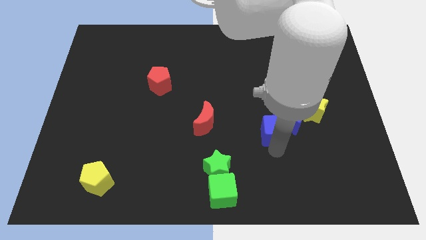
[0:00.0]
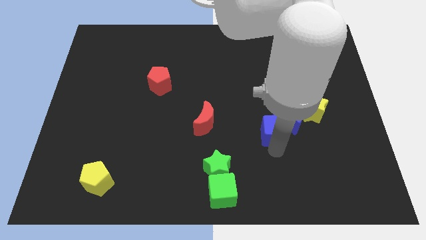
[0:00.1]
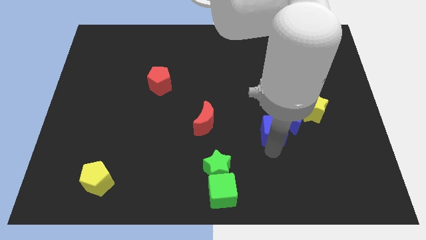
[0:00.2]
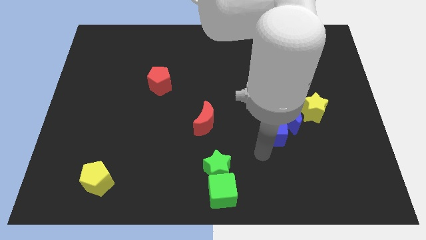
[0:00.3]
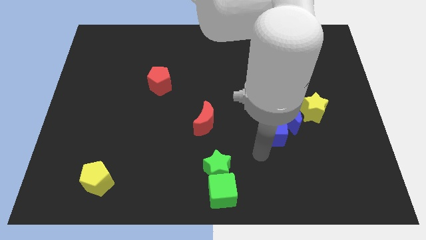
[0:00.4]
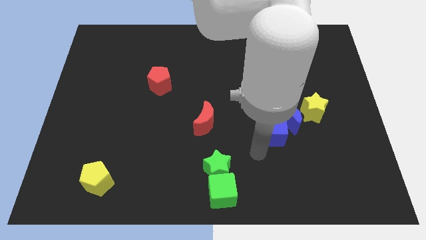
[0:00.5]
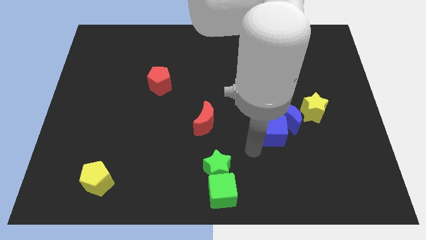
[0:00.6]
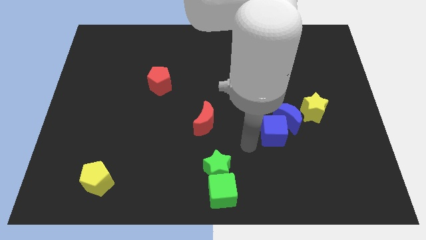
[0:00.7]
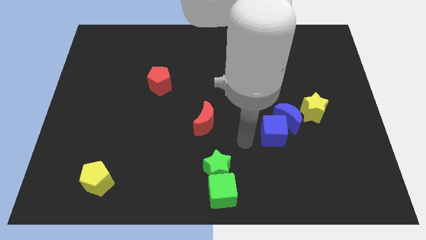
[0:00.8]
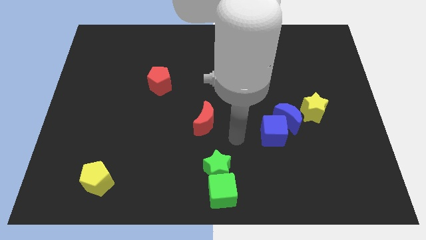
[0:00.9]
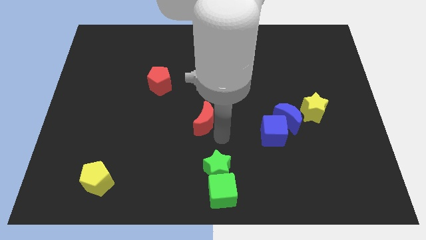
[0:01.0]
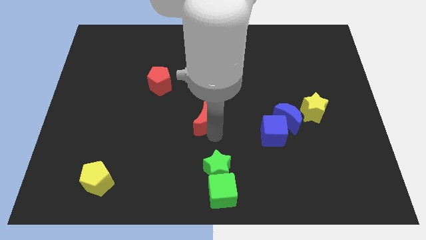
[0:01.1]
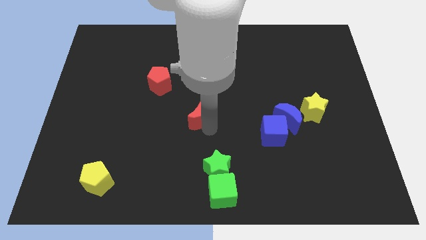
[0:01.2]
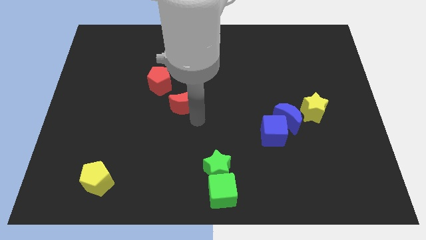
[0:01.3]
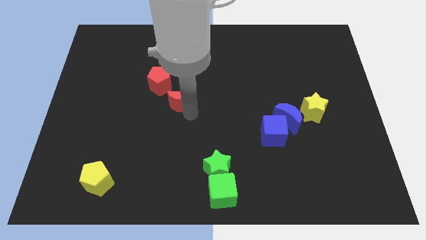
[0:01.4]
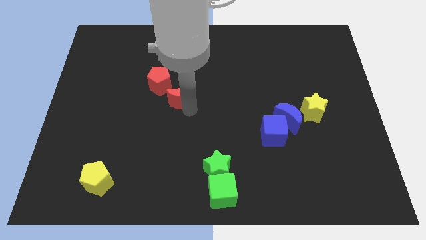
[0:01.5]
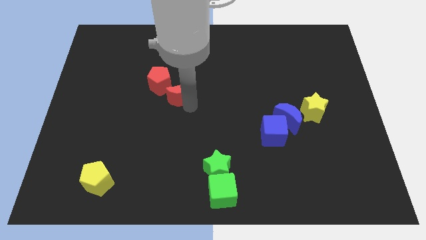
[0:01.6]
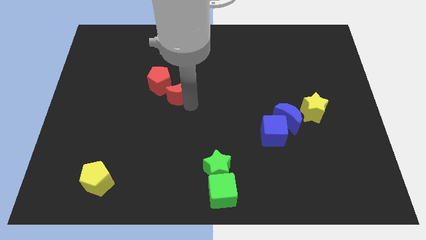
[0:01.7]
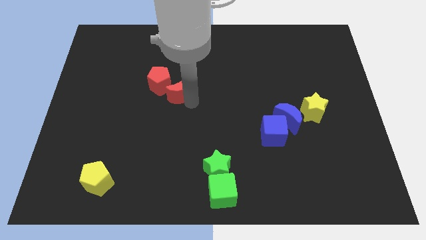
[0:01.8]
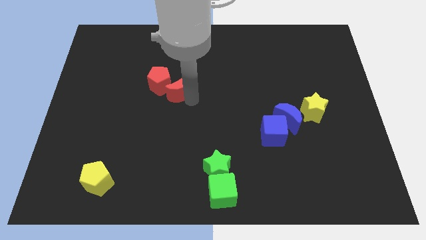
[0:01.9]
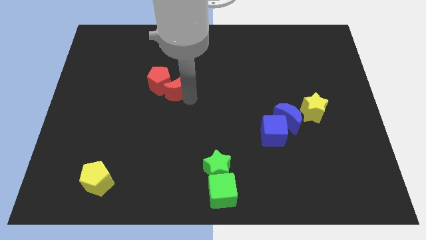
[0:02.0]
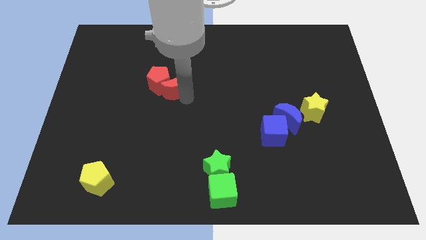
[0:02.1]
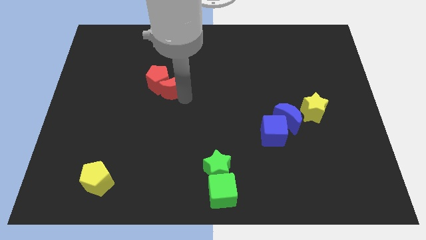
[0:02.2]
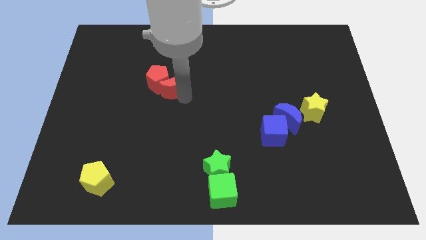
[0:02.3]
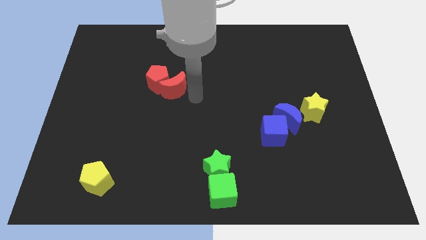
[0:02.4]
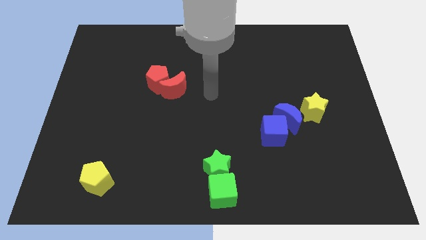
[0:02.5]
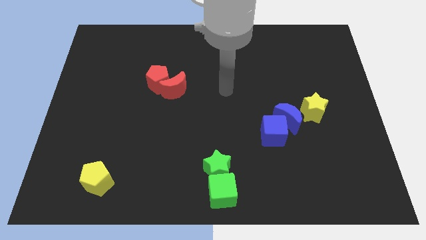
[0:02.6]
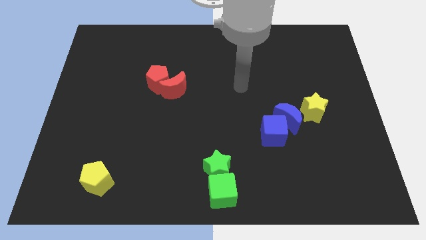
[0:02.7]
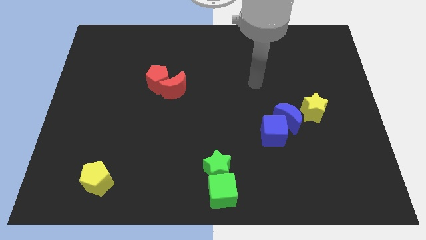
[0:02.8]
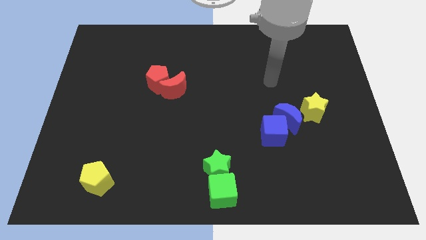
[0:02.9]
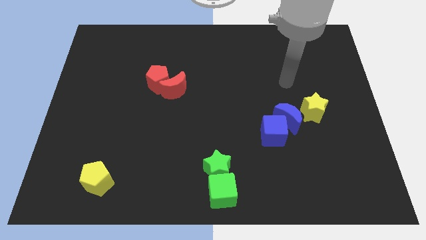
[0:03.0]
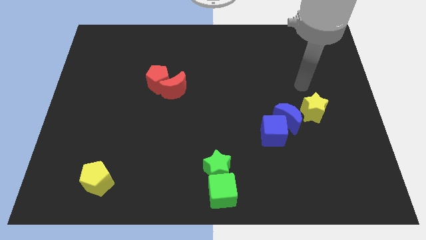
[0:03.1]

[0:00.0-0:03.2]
slide the red crescent into the red pentagon

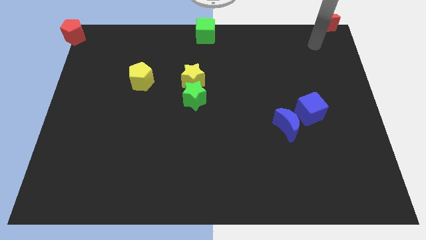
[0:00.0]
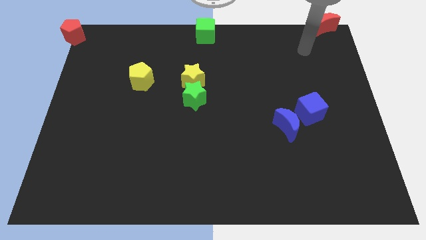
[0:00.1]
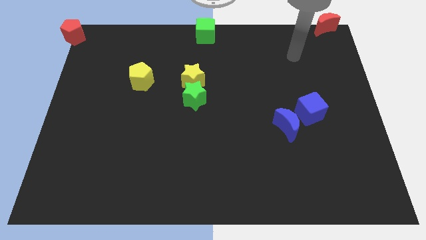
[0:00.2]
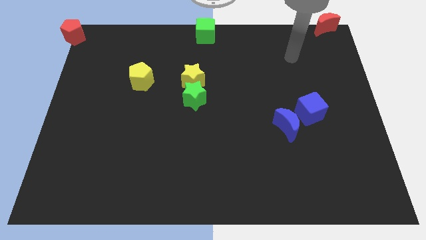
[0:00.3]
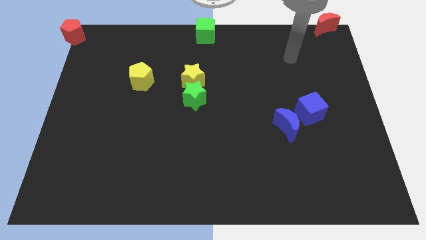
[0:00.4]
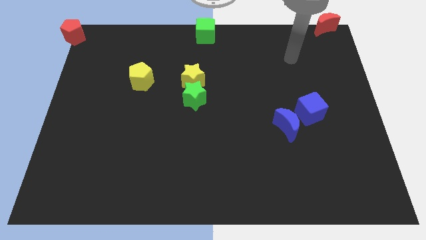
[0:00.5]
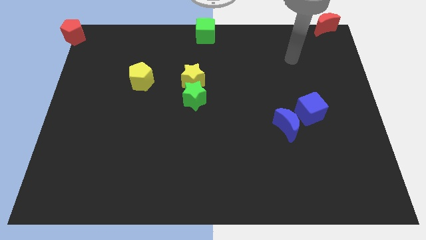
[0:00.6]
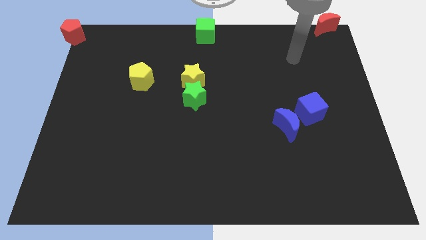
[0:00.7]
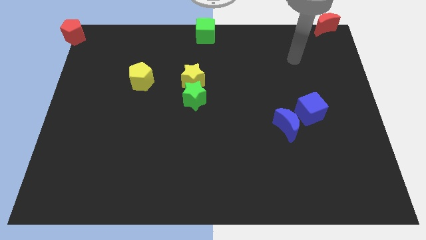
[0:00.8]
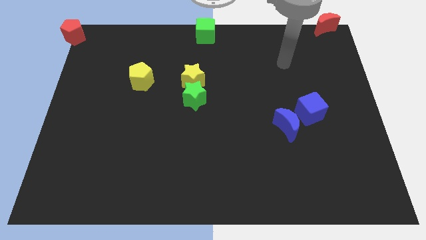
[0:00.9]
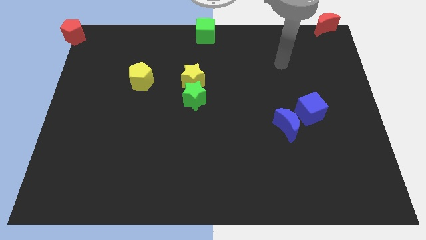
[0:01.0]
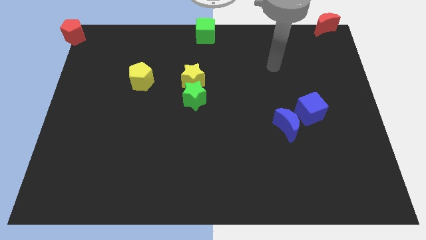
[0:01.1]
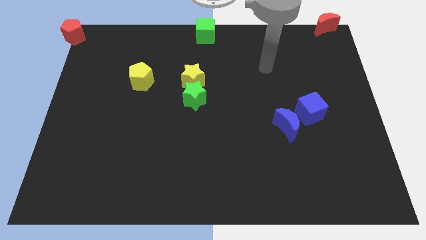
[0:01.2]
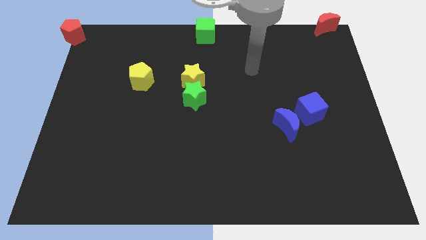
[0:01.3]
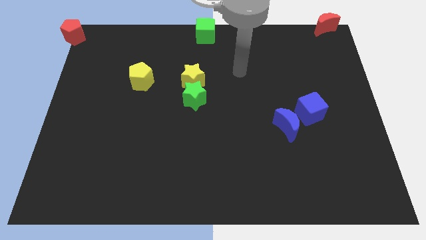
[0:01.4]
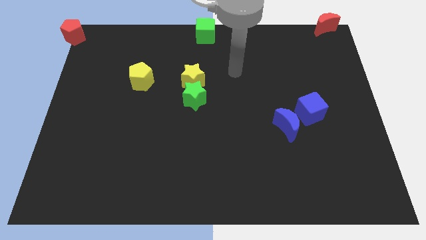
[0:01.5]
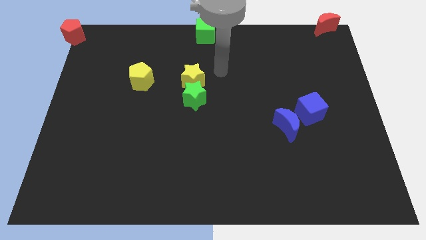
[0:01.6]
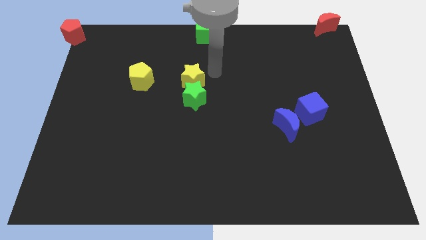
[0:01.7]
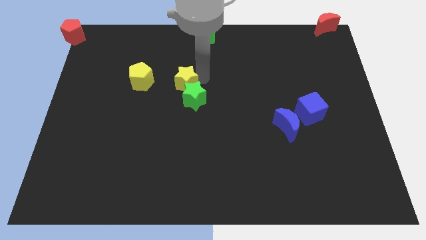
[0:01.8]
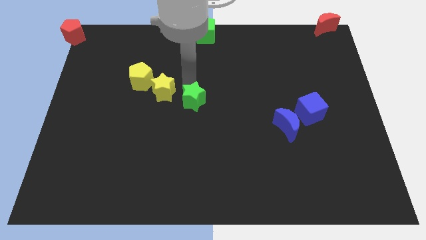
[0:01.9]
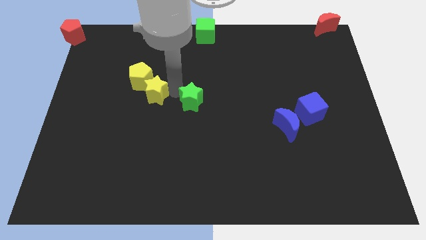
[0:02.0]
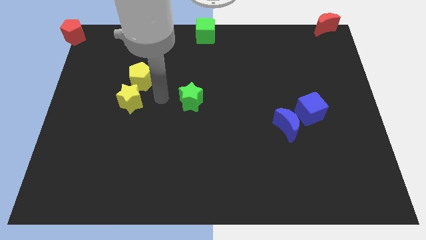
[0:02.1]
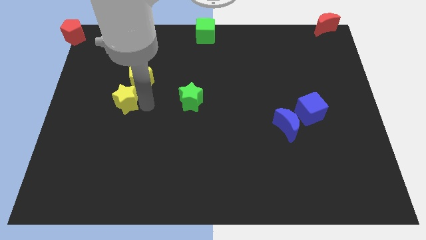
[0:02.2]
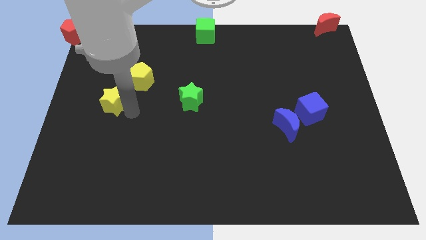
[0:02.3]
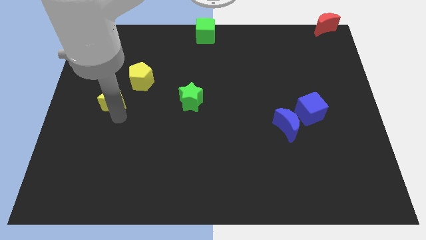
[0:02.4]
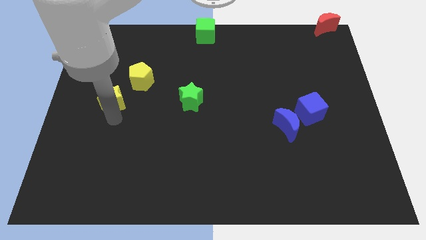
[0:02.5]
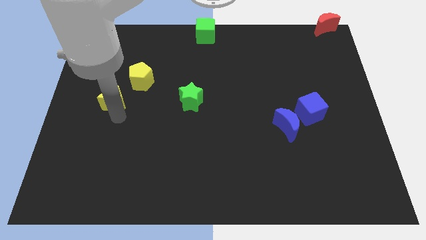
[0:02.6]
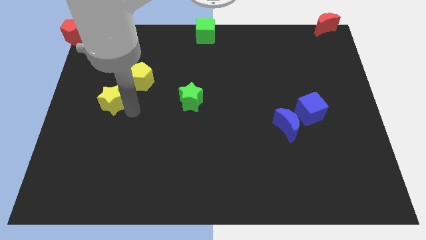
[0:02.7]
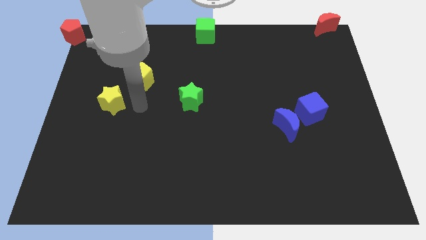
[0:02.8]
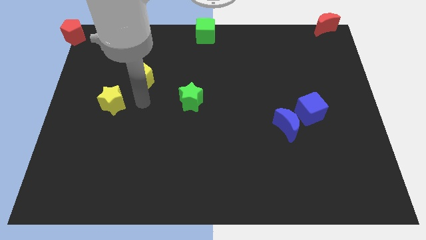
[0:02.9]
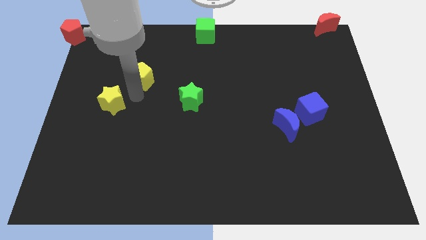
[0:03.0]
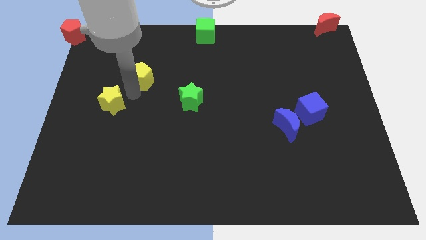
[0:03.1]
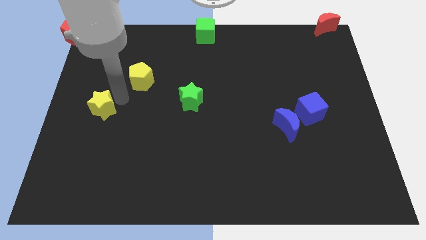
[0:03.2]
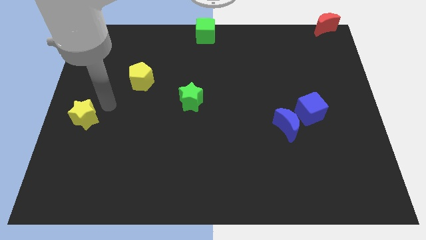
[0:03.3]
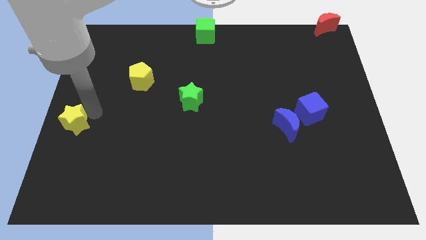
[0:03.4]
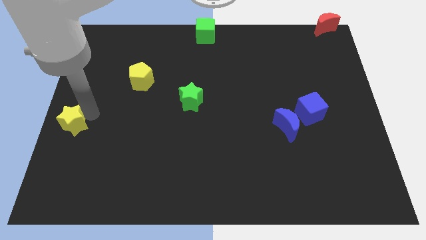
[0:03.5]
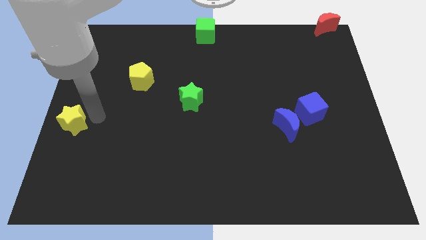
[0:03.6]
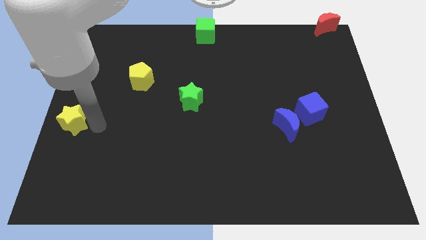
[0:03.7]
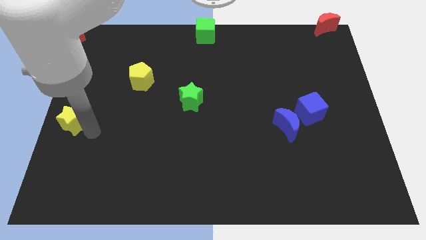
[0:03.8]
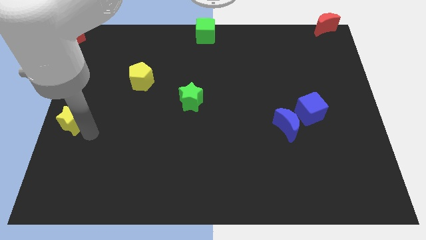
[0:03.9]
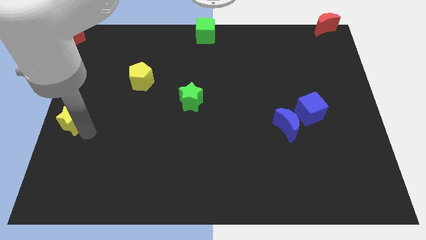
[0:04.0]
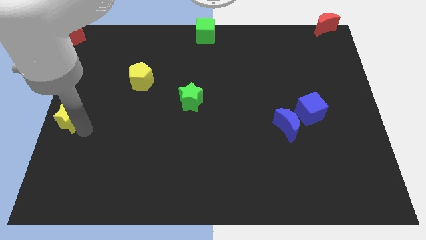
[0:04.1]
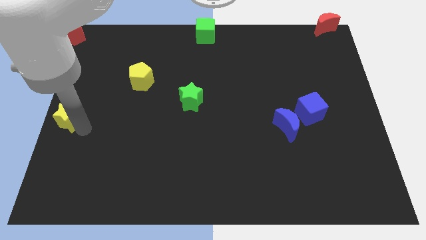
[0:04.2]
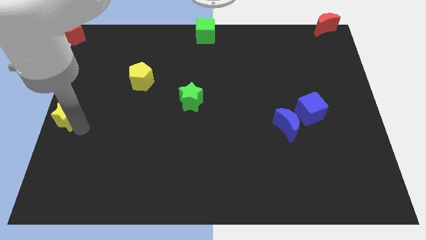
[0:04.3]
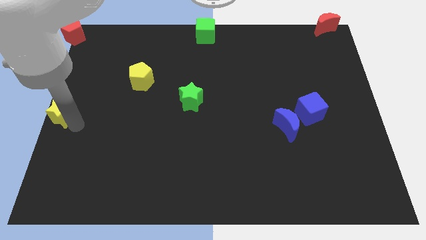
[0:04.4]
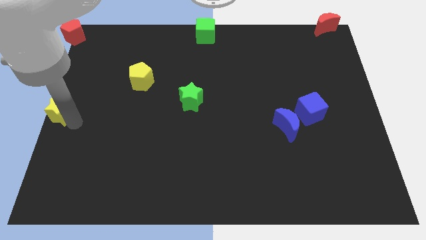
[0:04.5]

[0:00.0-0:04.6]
move the yellow star to the left center of the board

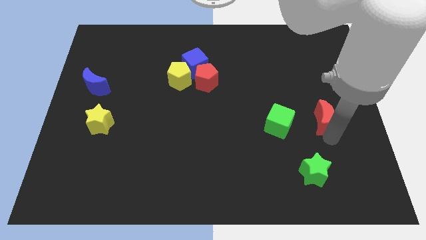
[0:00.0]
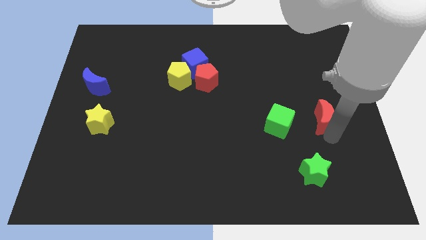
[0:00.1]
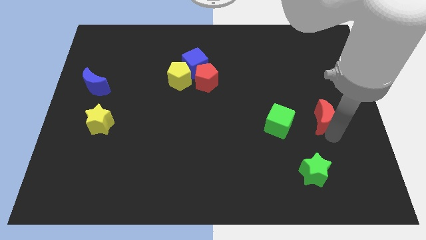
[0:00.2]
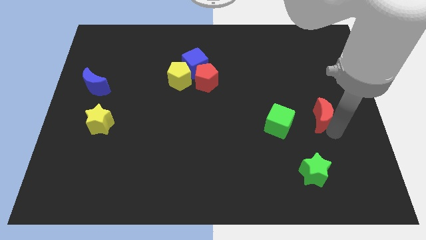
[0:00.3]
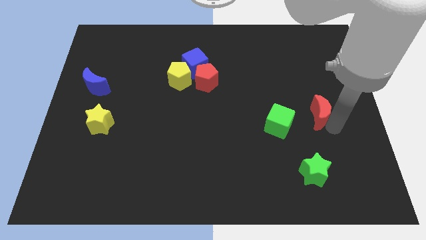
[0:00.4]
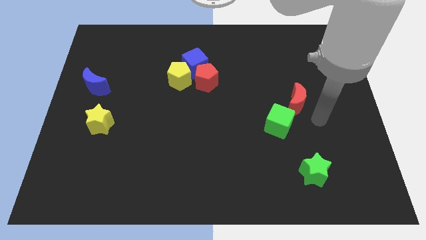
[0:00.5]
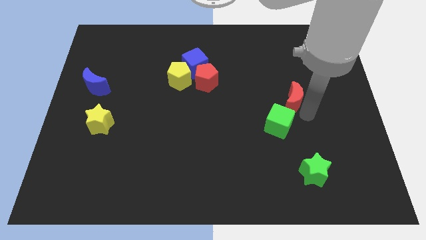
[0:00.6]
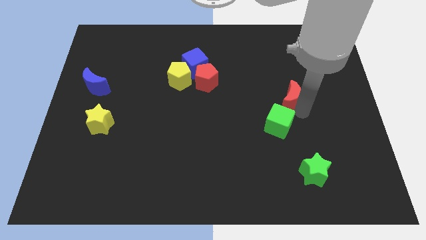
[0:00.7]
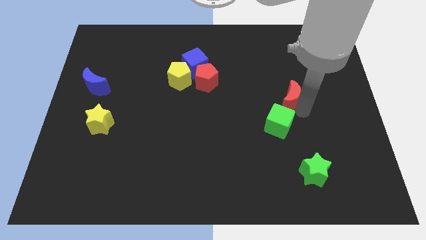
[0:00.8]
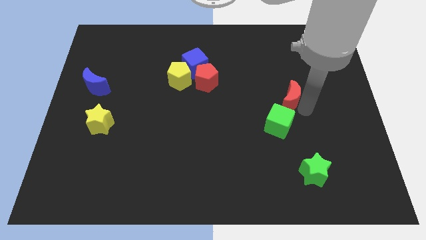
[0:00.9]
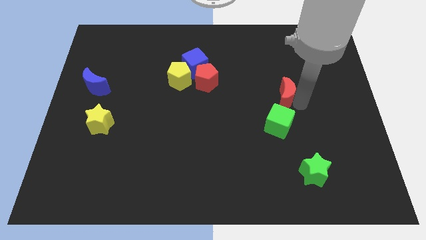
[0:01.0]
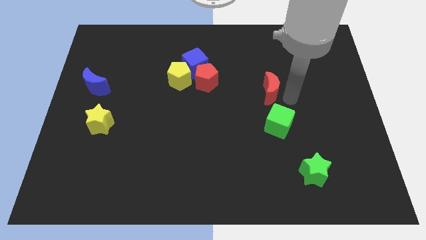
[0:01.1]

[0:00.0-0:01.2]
place the red moon at the top of green cube
